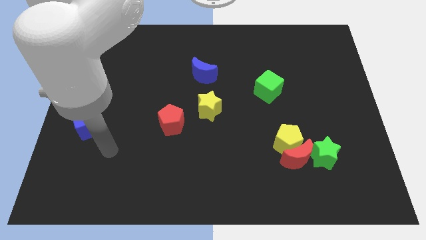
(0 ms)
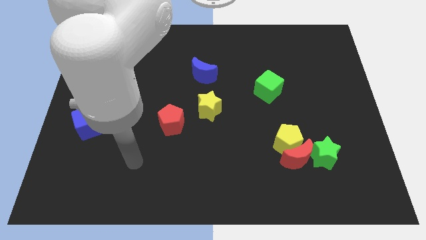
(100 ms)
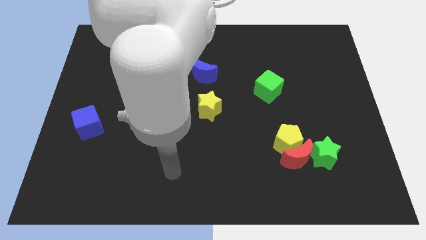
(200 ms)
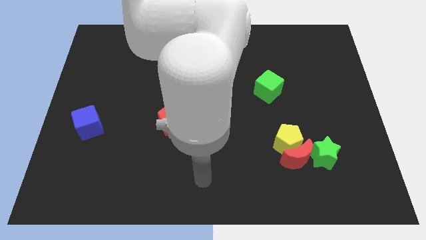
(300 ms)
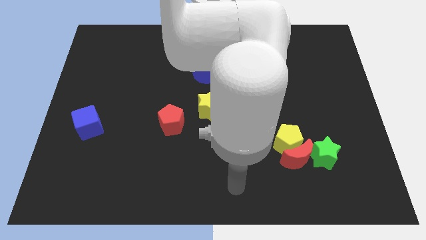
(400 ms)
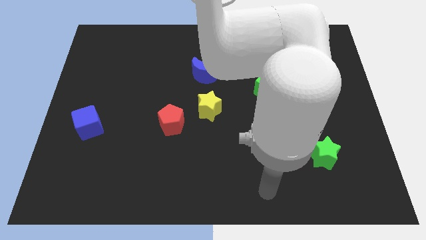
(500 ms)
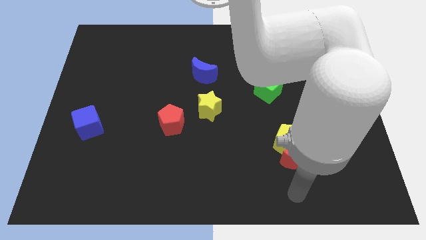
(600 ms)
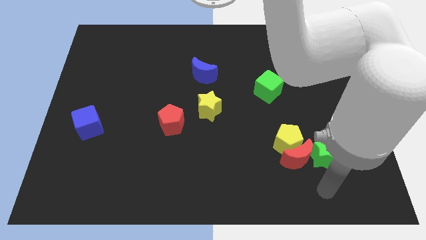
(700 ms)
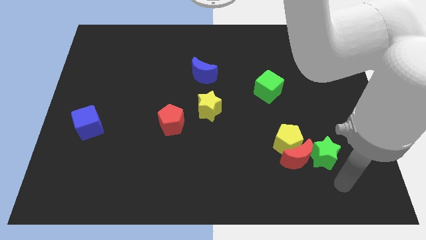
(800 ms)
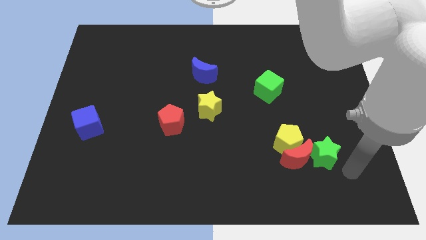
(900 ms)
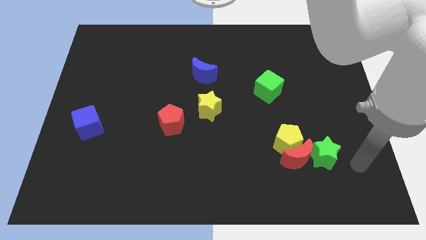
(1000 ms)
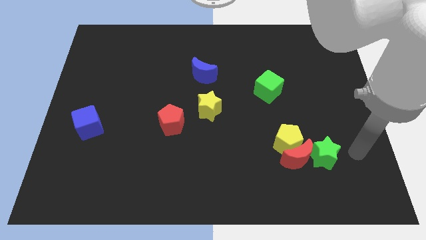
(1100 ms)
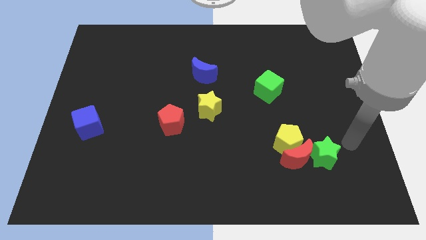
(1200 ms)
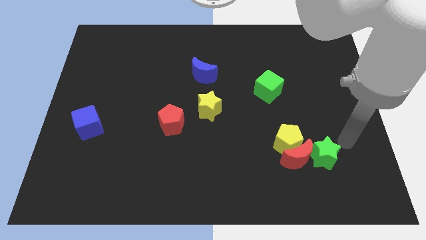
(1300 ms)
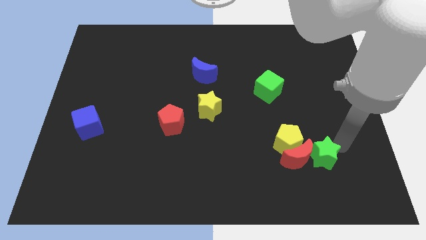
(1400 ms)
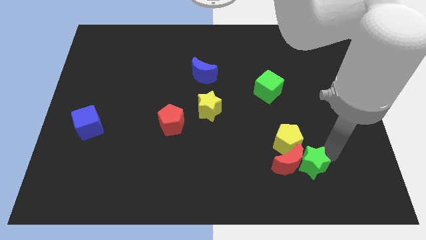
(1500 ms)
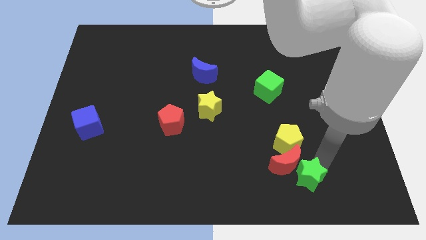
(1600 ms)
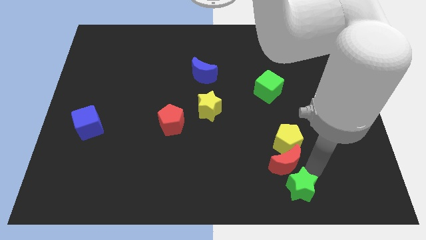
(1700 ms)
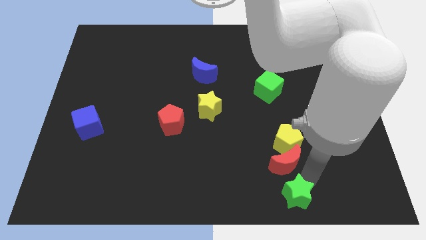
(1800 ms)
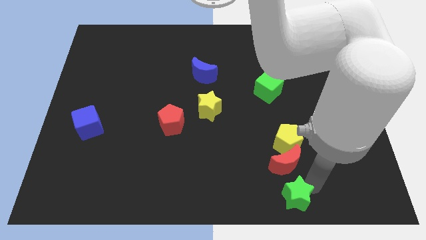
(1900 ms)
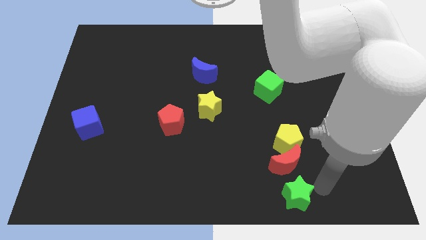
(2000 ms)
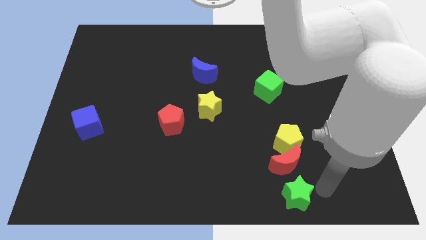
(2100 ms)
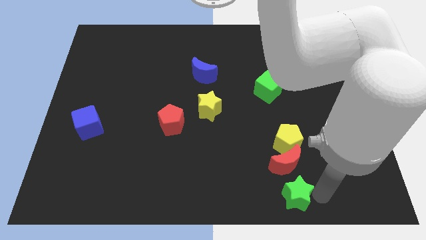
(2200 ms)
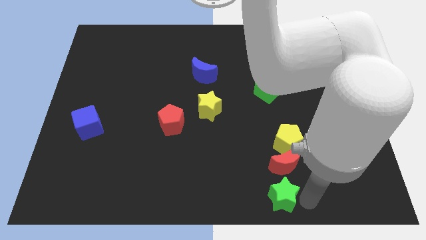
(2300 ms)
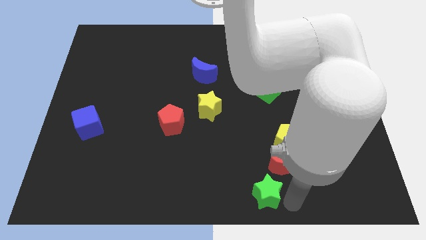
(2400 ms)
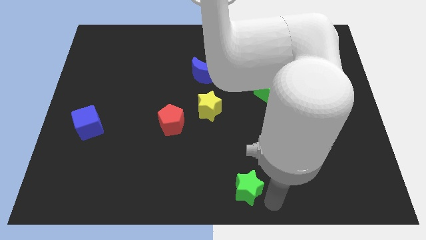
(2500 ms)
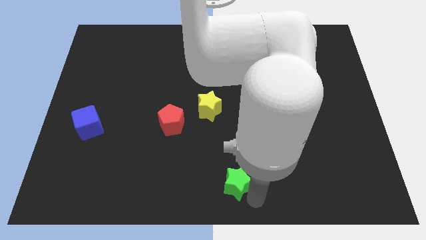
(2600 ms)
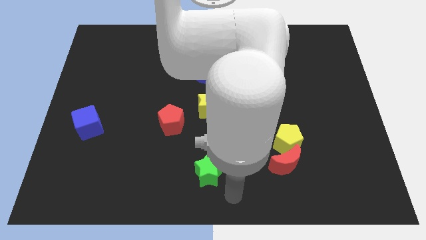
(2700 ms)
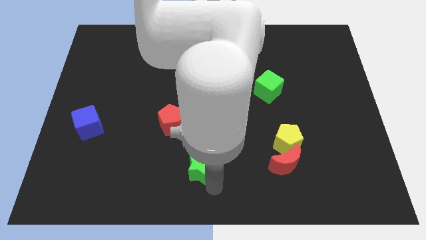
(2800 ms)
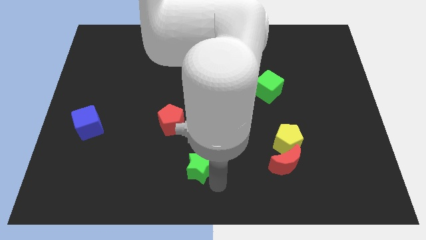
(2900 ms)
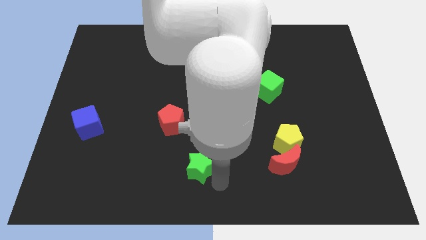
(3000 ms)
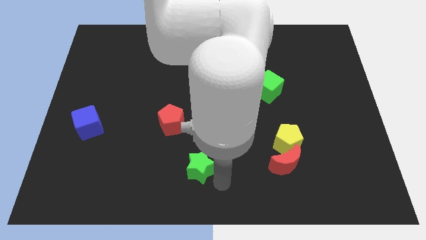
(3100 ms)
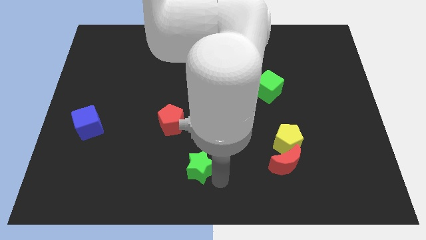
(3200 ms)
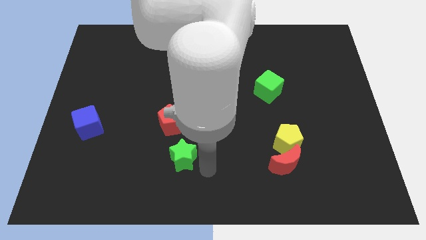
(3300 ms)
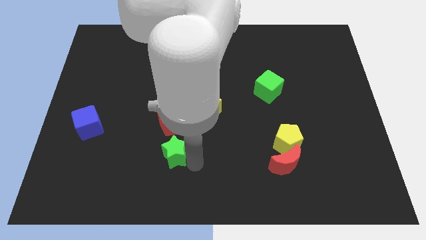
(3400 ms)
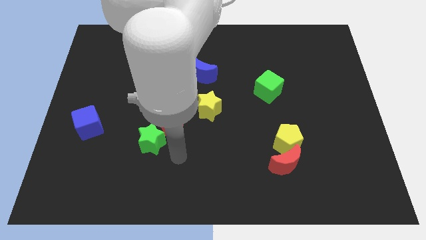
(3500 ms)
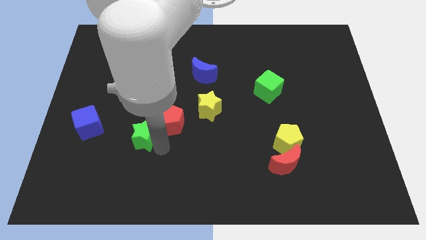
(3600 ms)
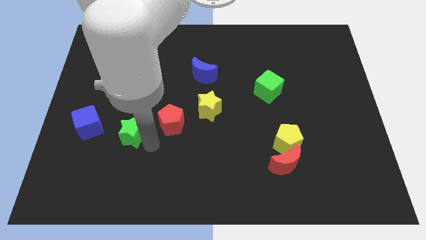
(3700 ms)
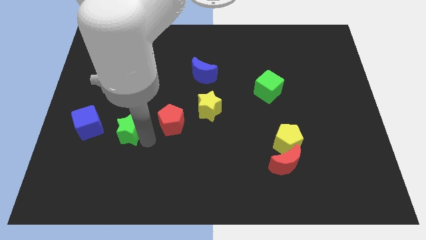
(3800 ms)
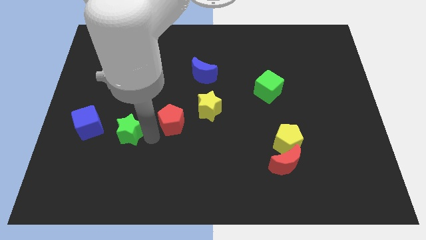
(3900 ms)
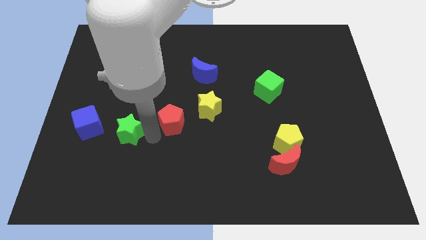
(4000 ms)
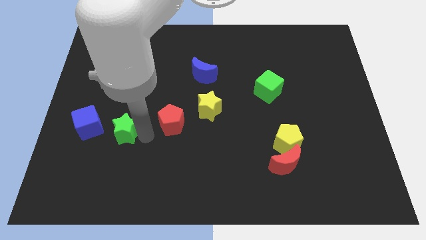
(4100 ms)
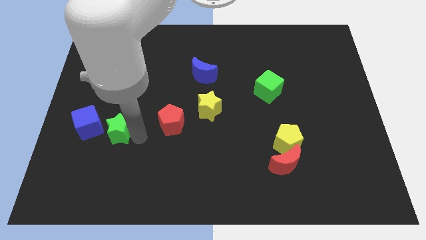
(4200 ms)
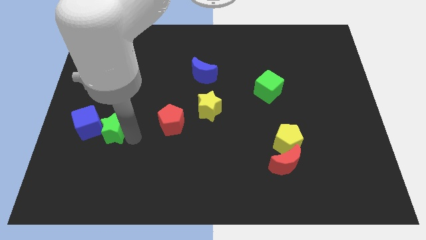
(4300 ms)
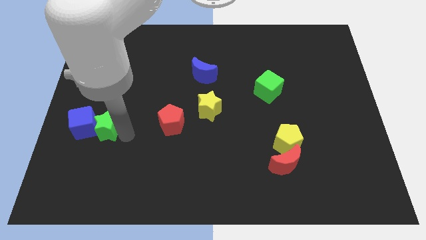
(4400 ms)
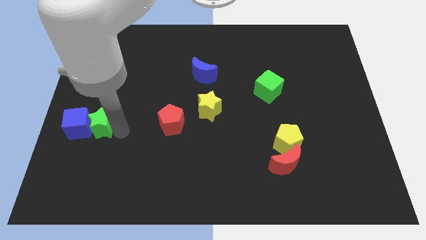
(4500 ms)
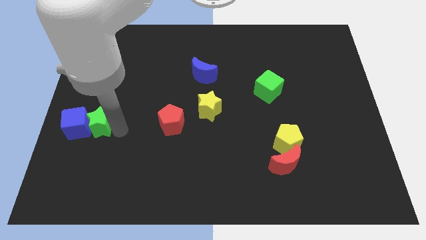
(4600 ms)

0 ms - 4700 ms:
push the green star close to the blue cube

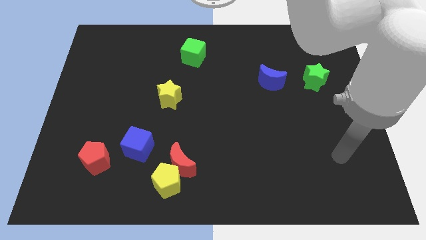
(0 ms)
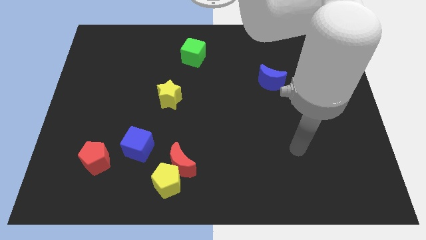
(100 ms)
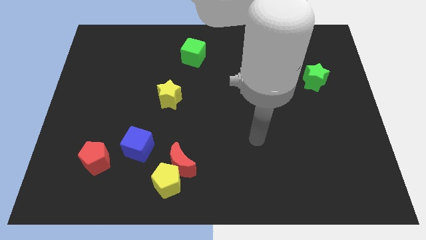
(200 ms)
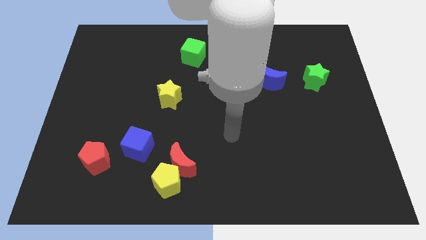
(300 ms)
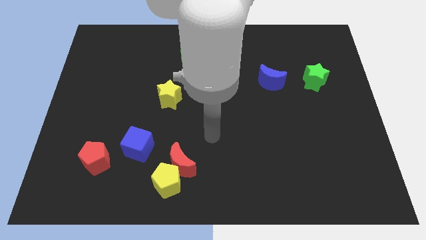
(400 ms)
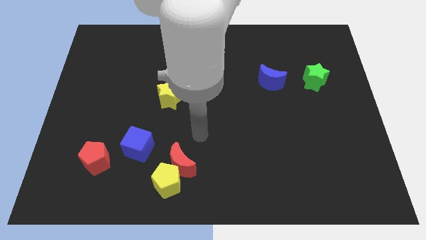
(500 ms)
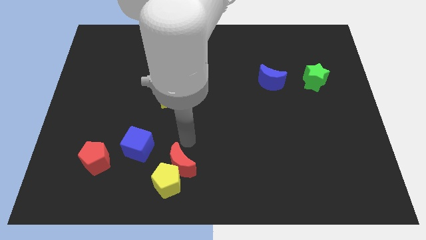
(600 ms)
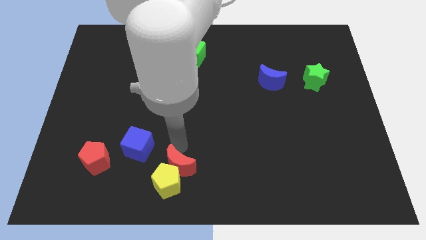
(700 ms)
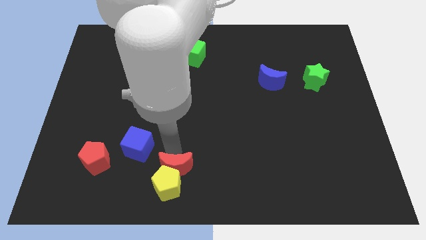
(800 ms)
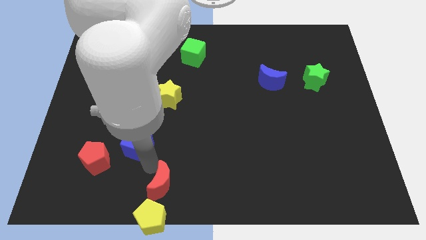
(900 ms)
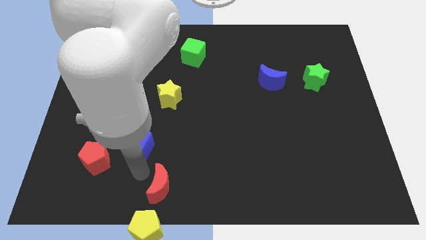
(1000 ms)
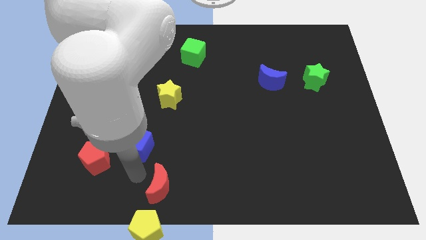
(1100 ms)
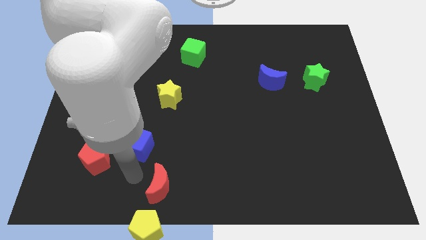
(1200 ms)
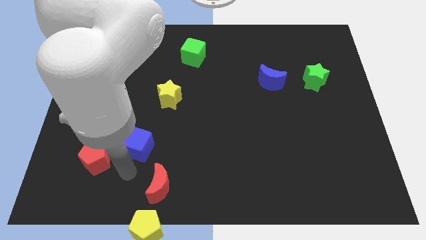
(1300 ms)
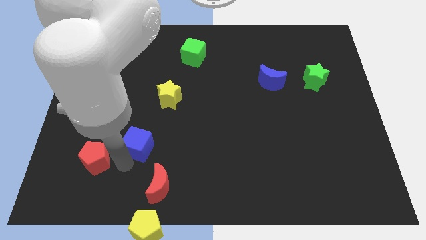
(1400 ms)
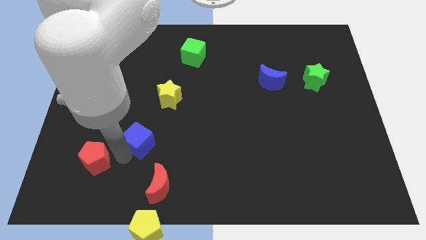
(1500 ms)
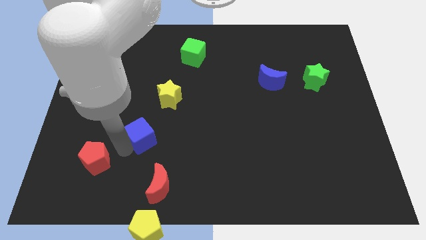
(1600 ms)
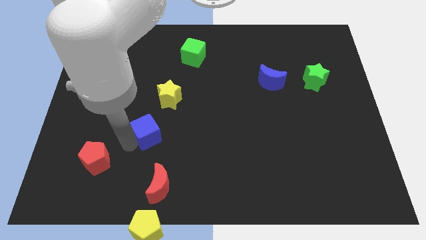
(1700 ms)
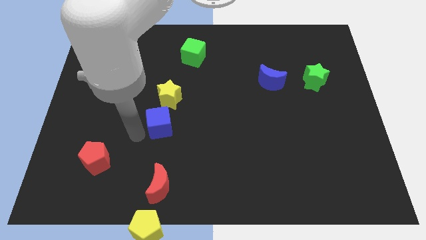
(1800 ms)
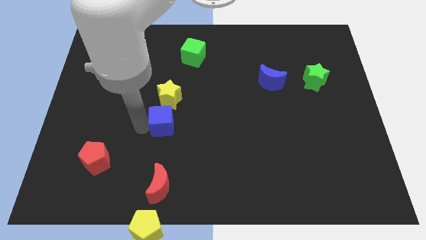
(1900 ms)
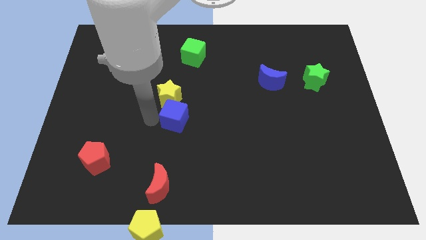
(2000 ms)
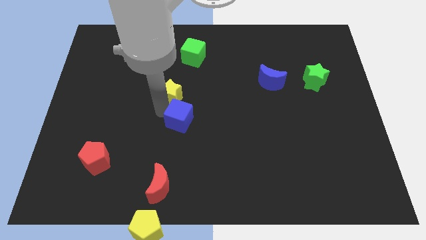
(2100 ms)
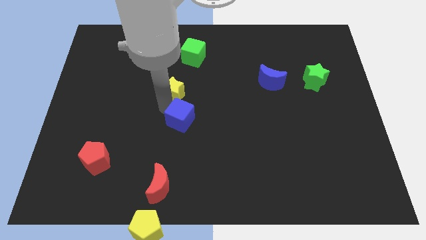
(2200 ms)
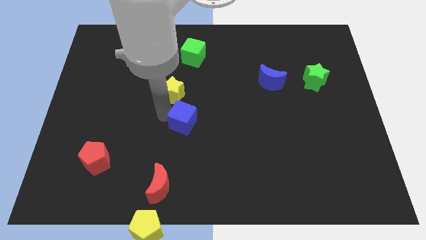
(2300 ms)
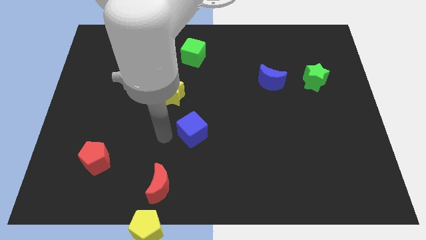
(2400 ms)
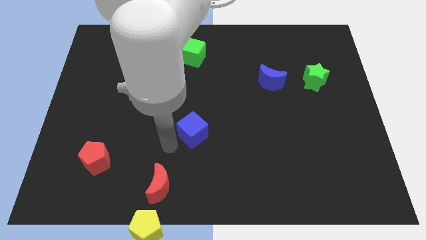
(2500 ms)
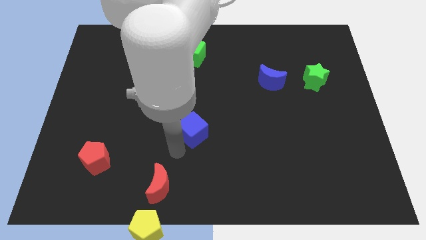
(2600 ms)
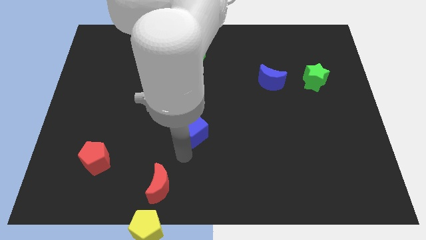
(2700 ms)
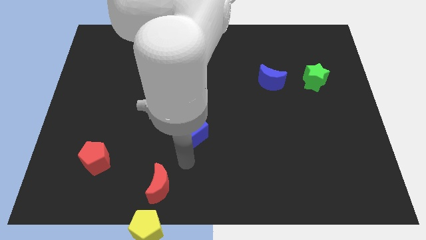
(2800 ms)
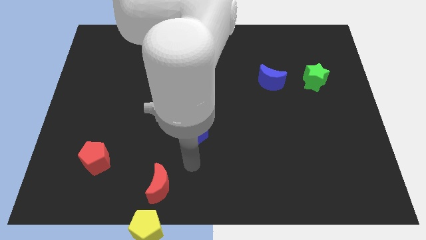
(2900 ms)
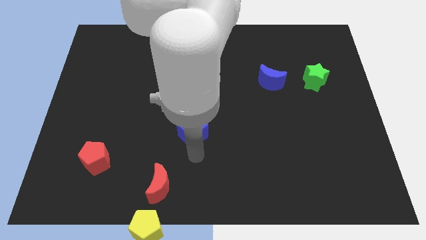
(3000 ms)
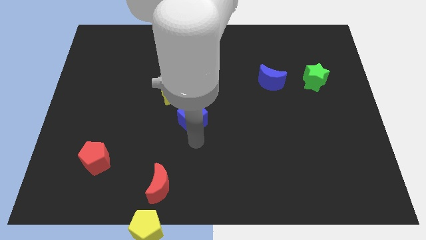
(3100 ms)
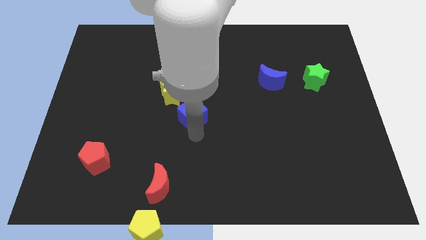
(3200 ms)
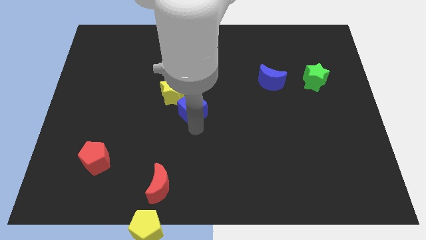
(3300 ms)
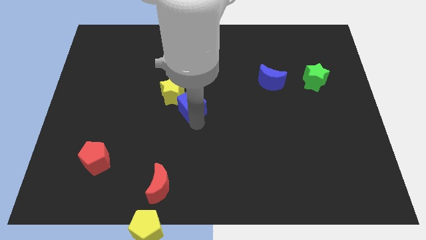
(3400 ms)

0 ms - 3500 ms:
put the blue cube close to the yellow star

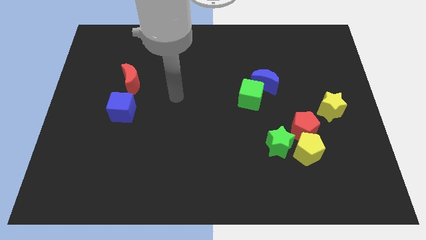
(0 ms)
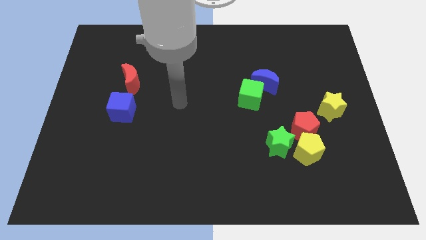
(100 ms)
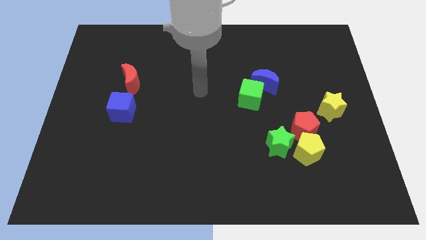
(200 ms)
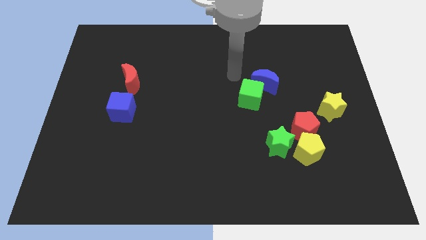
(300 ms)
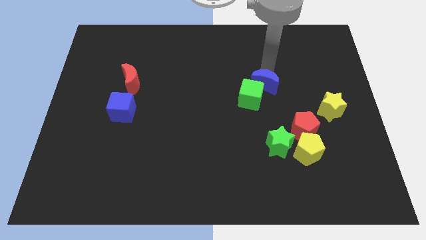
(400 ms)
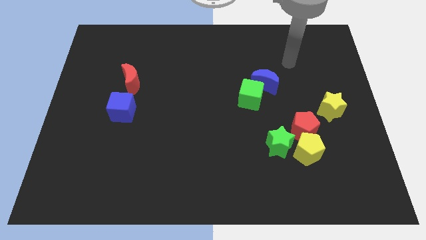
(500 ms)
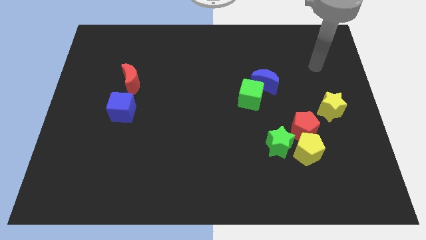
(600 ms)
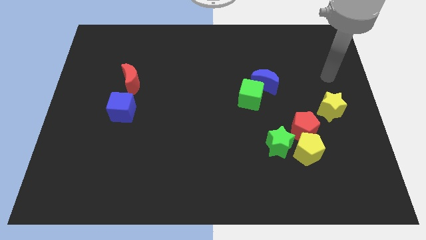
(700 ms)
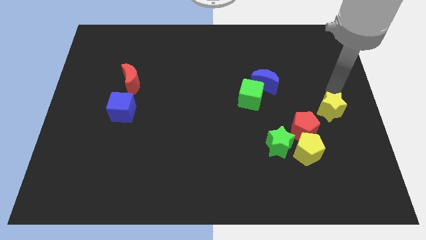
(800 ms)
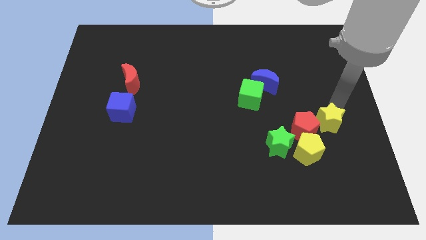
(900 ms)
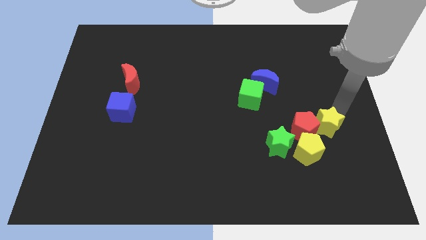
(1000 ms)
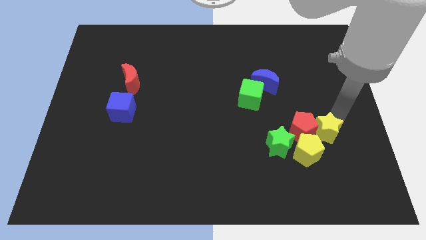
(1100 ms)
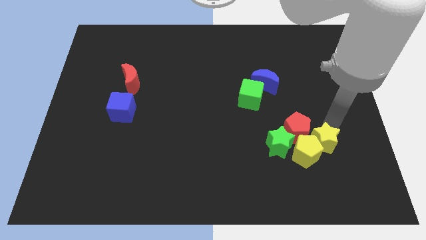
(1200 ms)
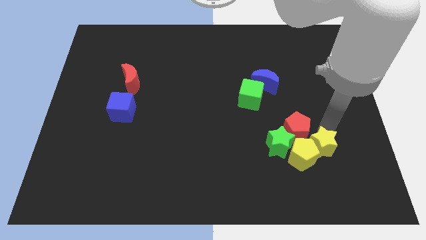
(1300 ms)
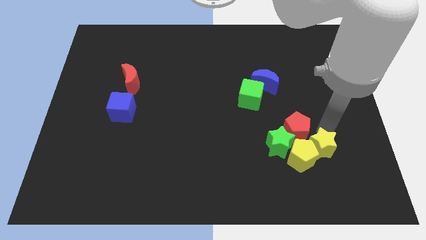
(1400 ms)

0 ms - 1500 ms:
slide the yellow star towards the yellow pentagon
